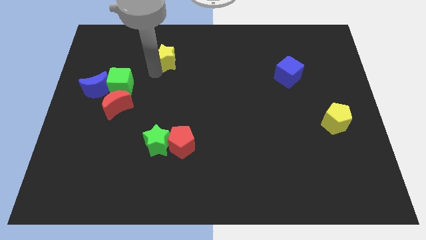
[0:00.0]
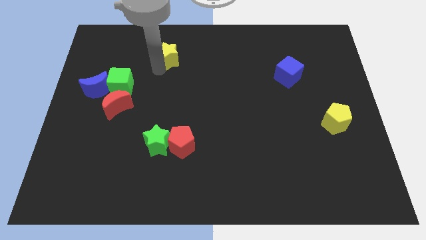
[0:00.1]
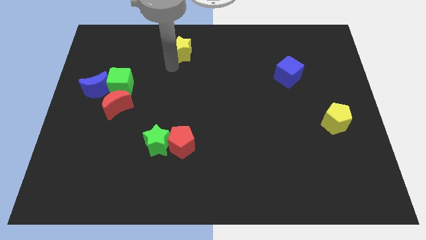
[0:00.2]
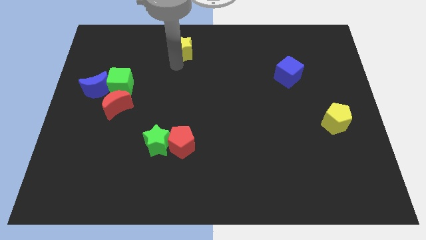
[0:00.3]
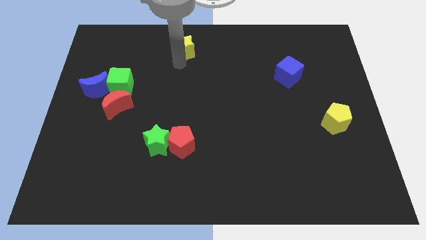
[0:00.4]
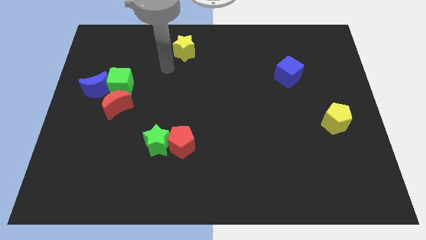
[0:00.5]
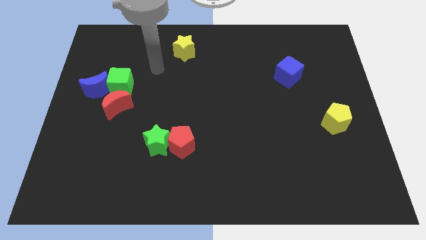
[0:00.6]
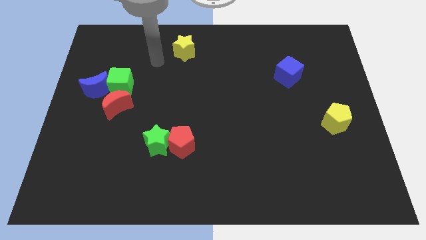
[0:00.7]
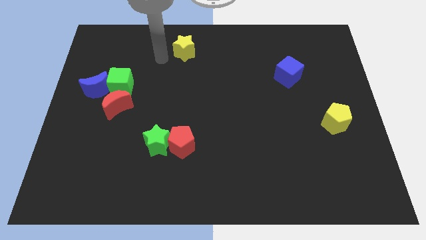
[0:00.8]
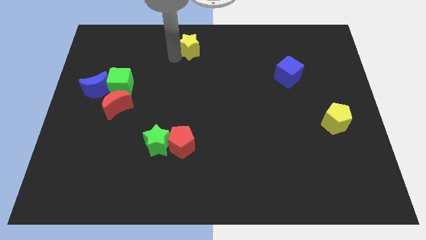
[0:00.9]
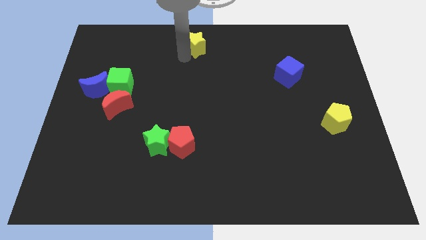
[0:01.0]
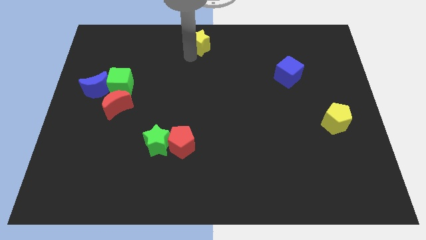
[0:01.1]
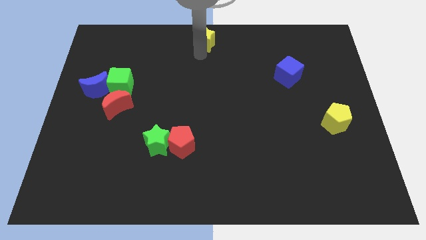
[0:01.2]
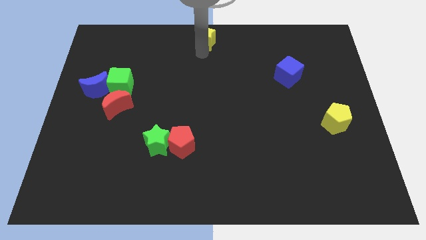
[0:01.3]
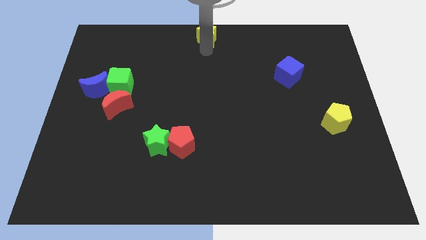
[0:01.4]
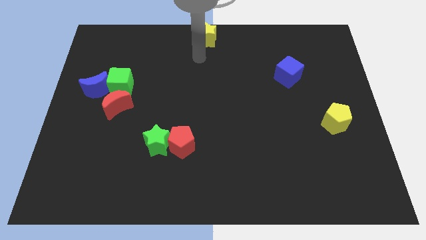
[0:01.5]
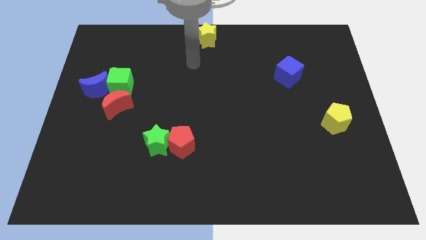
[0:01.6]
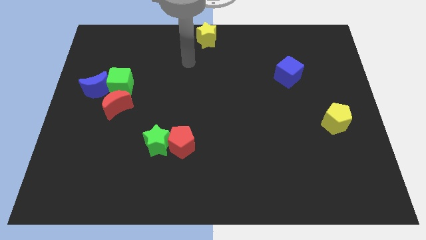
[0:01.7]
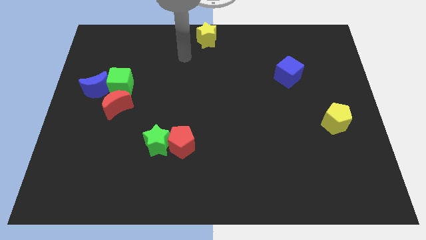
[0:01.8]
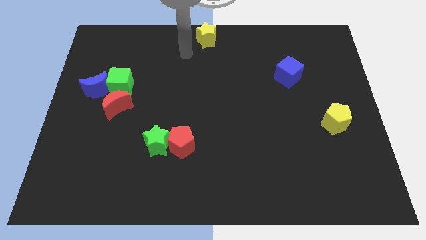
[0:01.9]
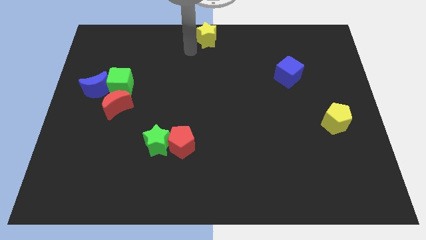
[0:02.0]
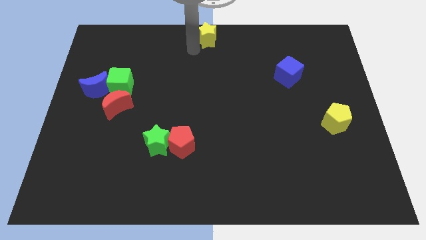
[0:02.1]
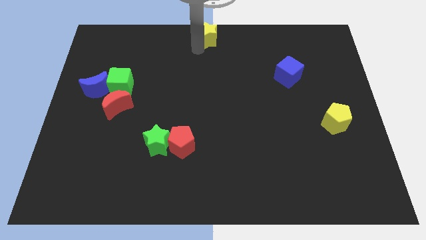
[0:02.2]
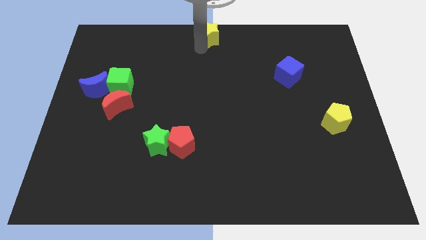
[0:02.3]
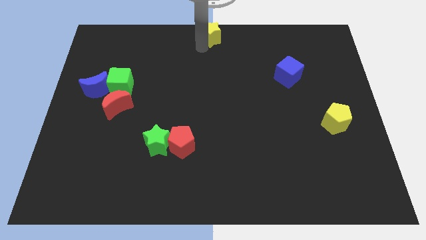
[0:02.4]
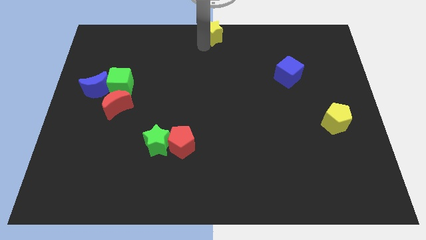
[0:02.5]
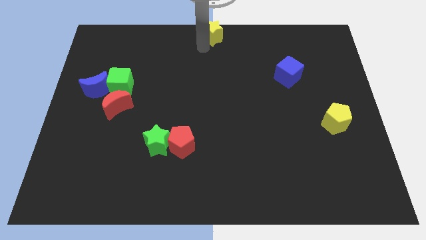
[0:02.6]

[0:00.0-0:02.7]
place the yellow star in the top middle

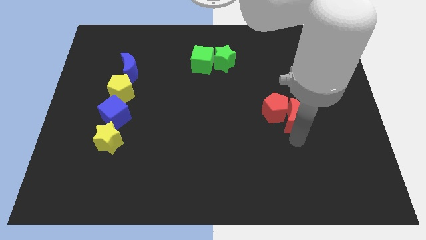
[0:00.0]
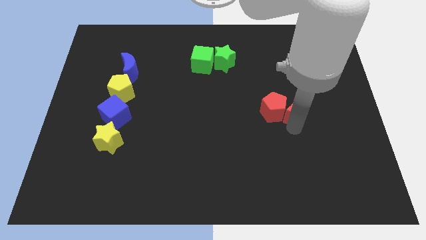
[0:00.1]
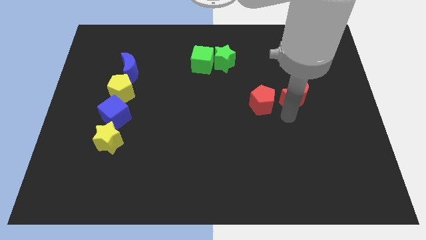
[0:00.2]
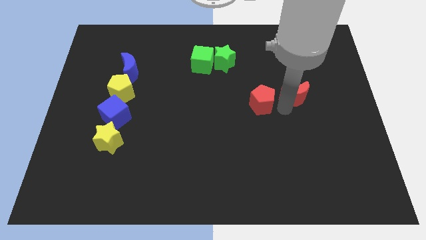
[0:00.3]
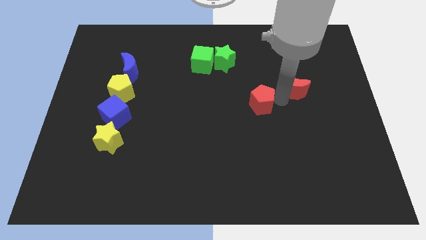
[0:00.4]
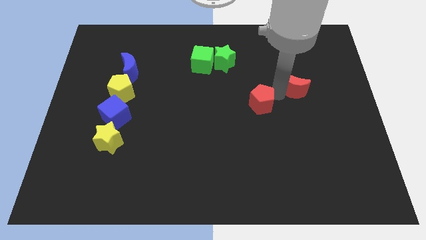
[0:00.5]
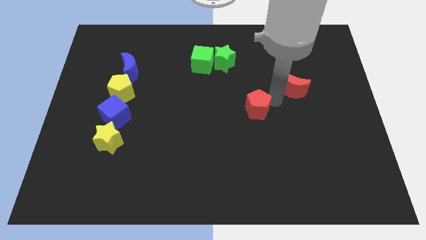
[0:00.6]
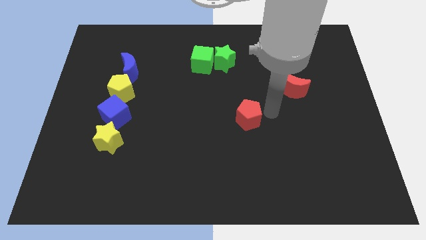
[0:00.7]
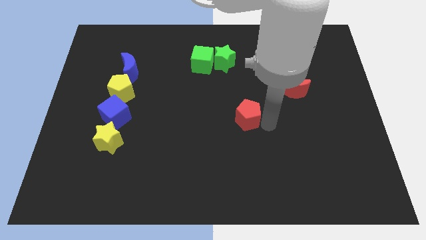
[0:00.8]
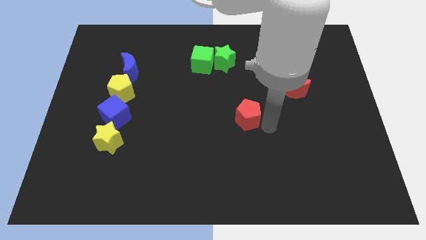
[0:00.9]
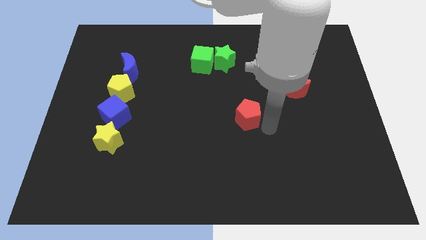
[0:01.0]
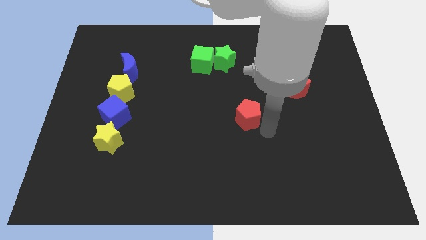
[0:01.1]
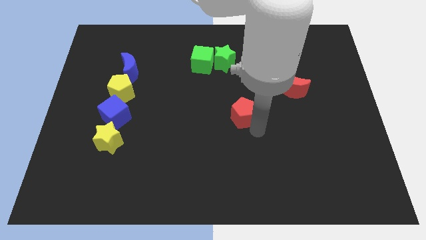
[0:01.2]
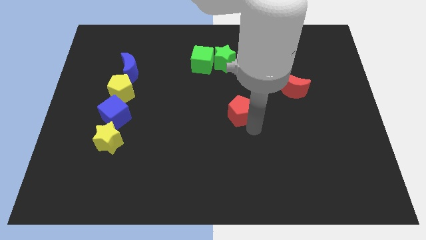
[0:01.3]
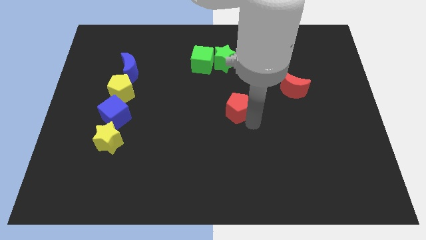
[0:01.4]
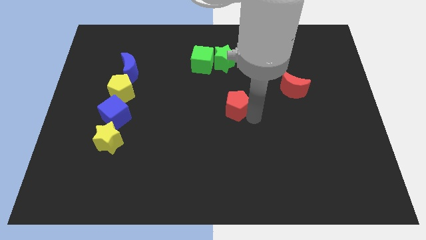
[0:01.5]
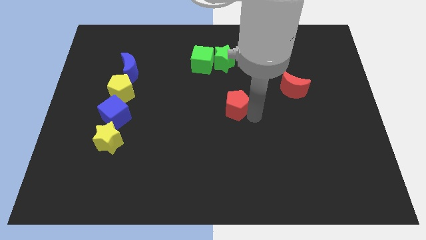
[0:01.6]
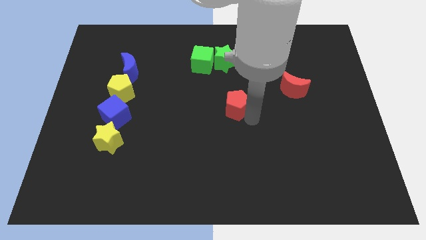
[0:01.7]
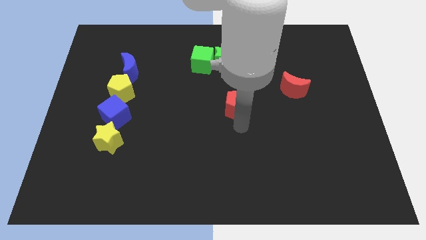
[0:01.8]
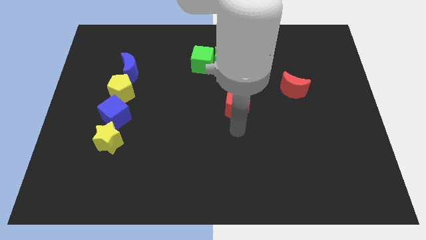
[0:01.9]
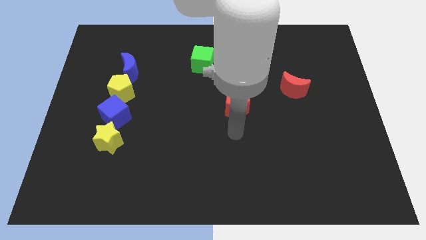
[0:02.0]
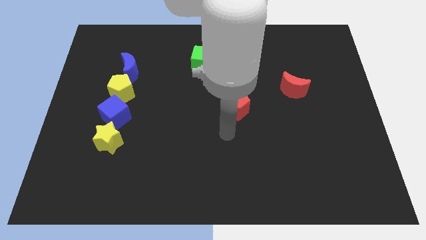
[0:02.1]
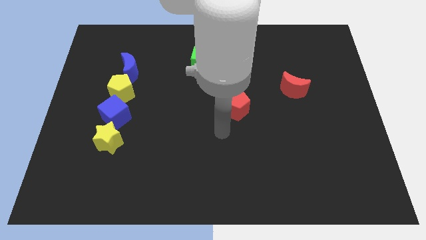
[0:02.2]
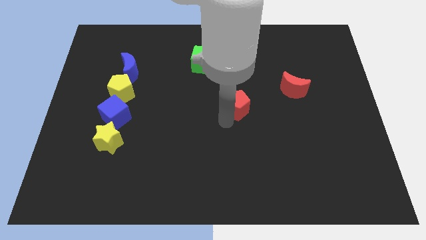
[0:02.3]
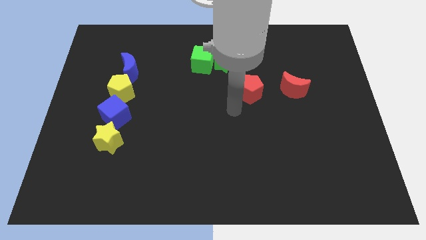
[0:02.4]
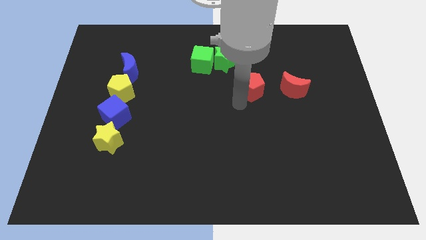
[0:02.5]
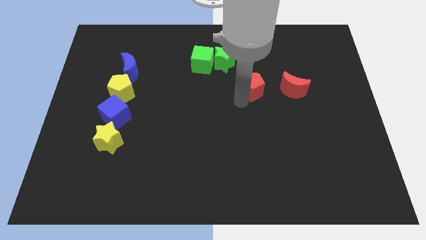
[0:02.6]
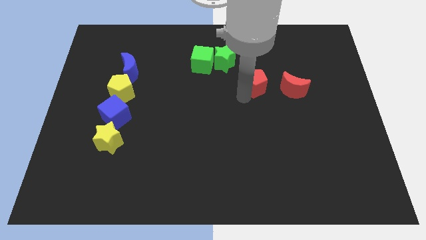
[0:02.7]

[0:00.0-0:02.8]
separate the red pentagon and red moon

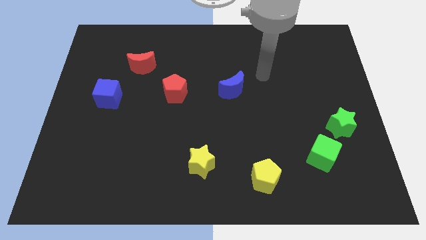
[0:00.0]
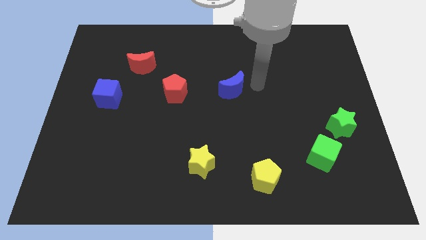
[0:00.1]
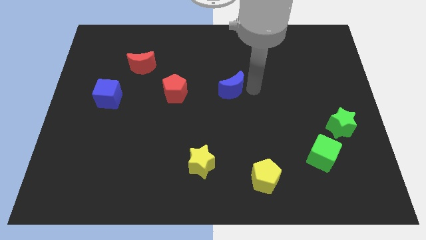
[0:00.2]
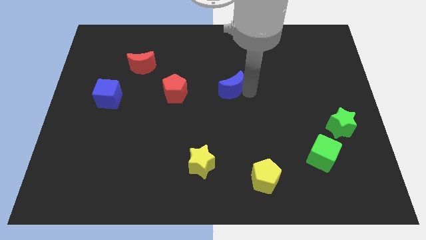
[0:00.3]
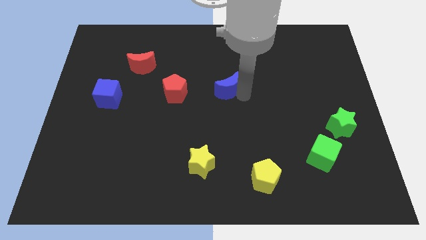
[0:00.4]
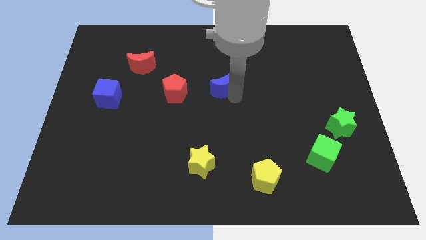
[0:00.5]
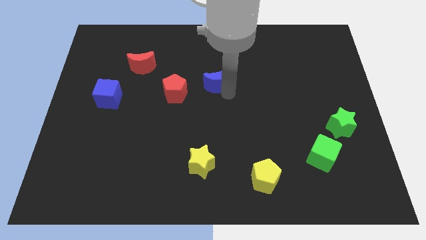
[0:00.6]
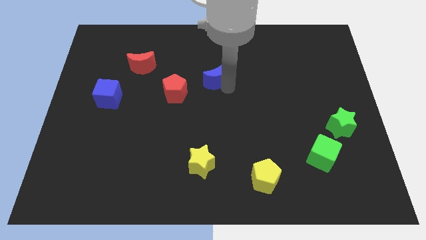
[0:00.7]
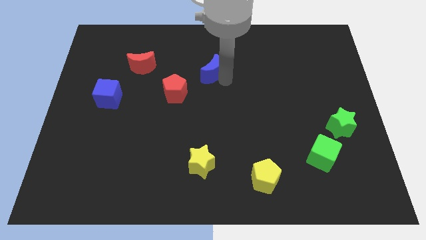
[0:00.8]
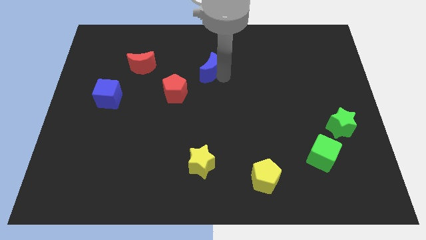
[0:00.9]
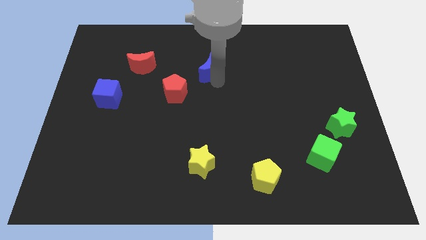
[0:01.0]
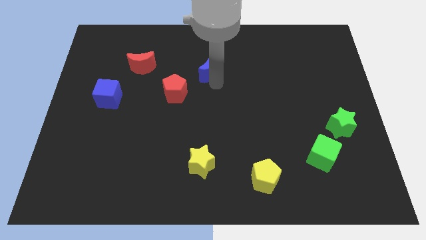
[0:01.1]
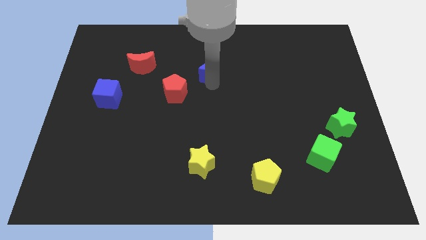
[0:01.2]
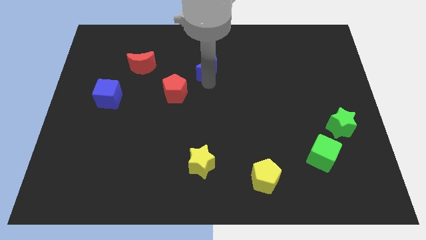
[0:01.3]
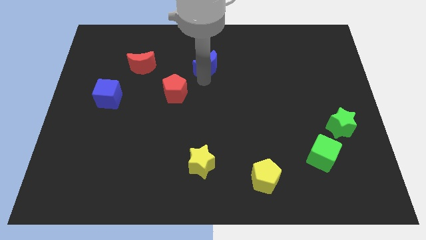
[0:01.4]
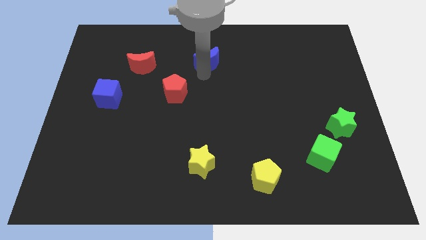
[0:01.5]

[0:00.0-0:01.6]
push the blue moon upward

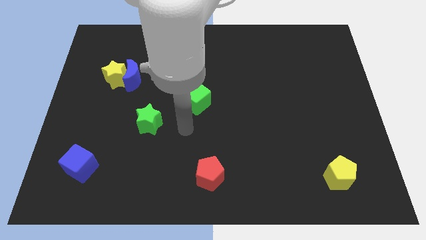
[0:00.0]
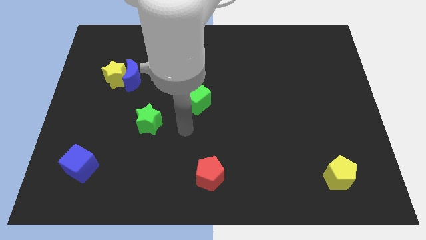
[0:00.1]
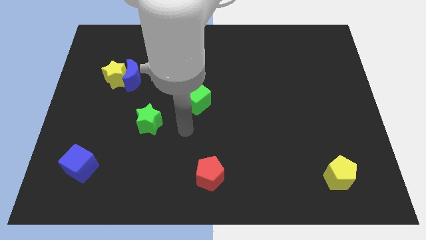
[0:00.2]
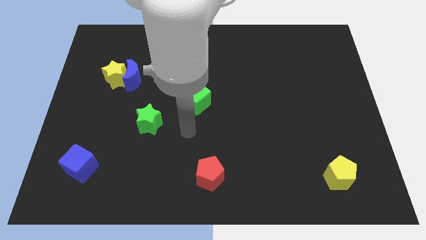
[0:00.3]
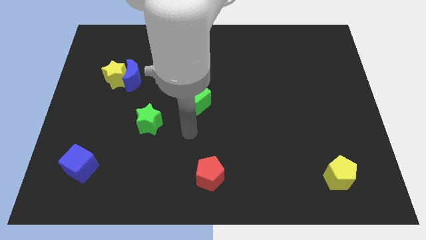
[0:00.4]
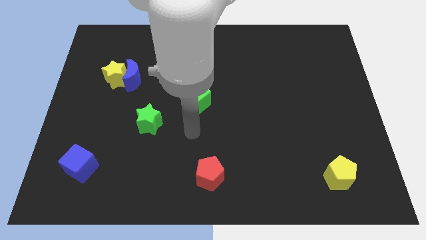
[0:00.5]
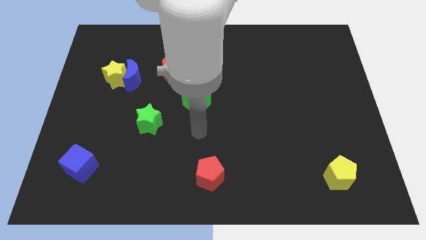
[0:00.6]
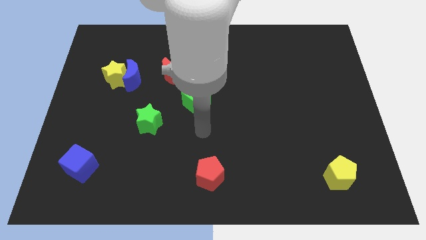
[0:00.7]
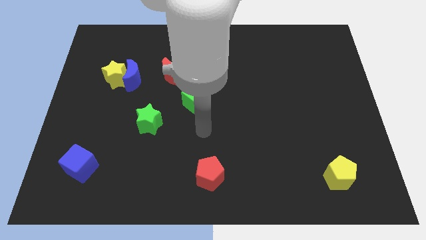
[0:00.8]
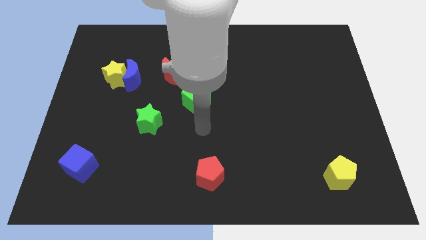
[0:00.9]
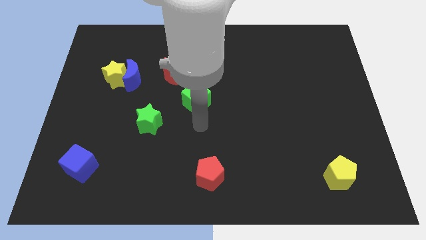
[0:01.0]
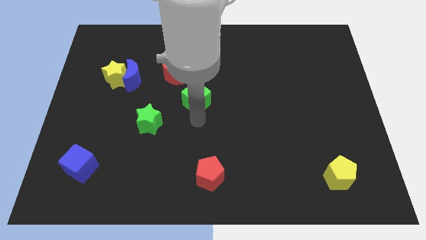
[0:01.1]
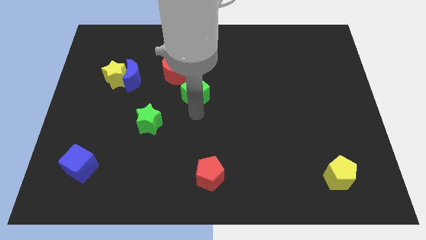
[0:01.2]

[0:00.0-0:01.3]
point your arm at the bottom of green cube

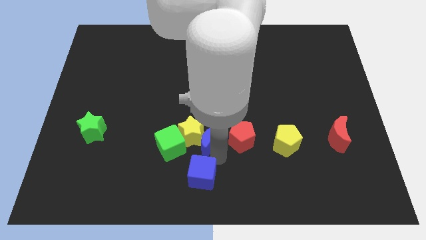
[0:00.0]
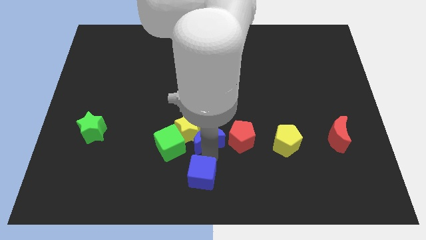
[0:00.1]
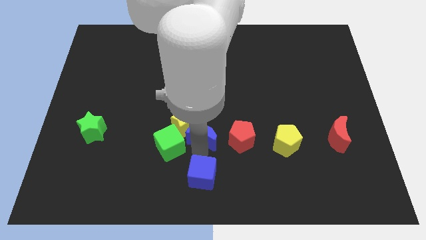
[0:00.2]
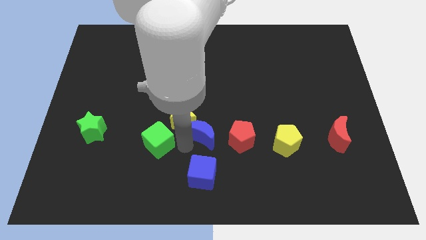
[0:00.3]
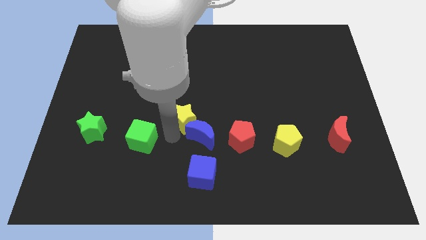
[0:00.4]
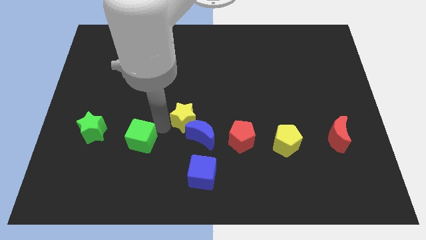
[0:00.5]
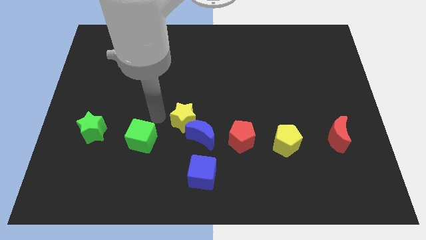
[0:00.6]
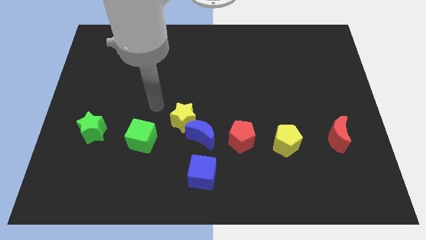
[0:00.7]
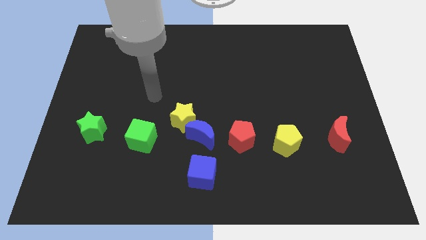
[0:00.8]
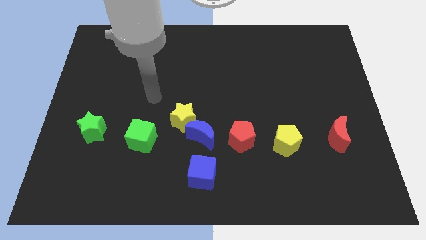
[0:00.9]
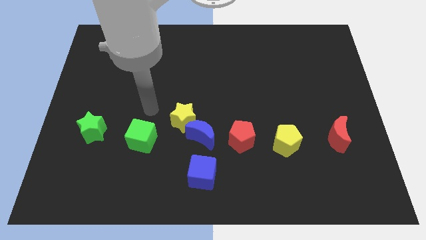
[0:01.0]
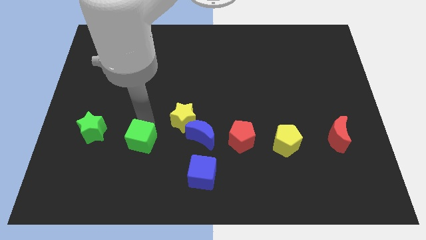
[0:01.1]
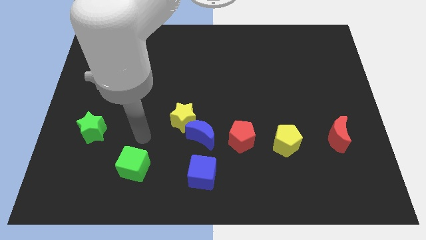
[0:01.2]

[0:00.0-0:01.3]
separate green cube from yellow star
